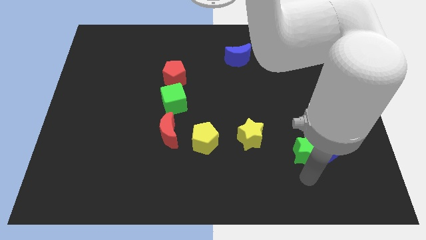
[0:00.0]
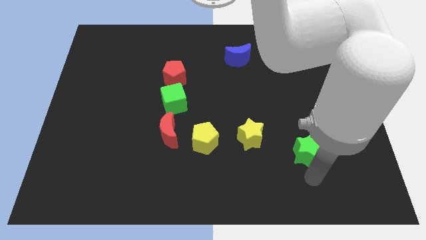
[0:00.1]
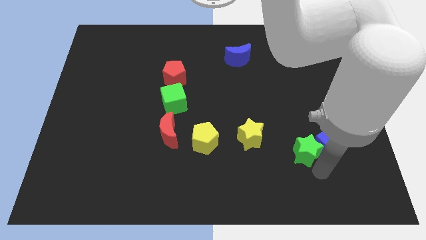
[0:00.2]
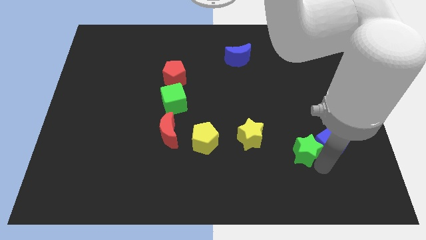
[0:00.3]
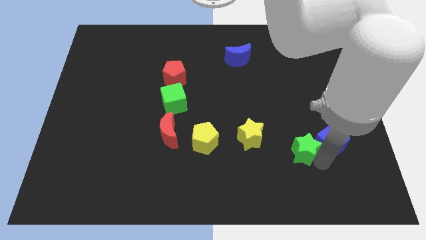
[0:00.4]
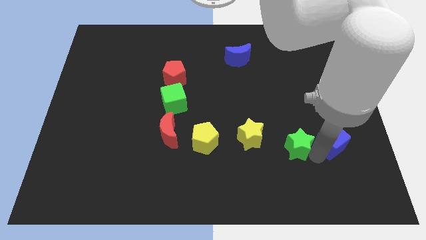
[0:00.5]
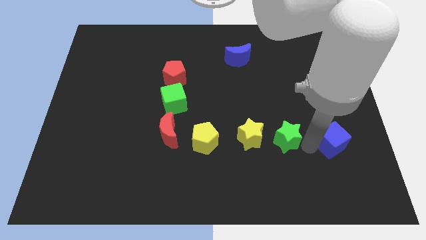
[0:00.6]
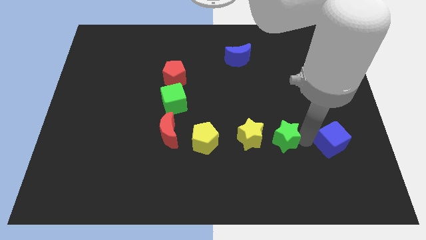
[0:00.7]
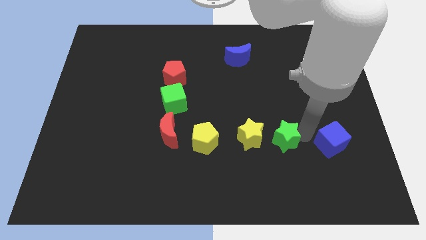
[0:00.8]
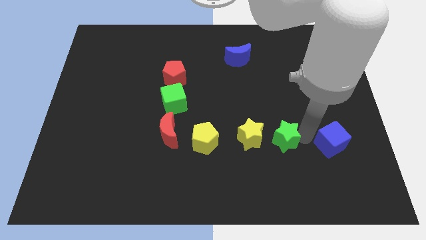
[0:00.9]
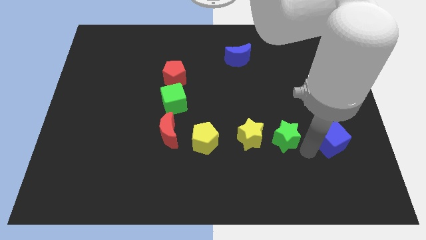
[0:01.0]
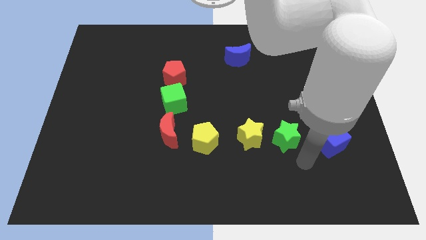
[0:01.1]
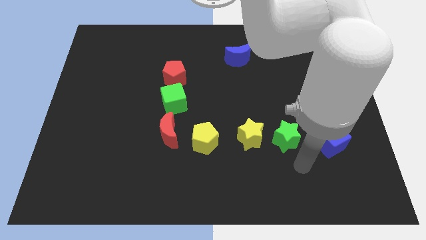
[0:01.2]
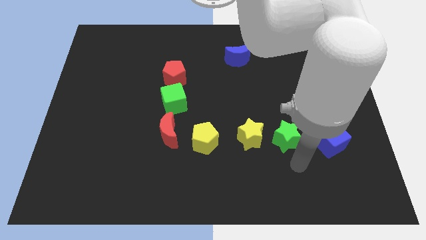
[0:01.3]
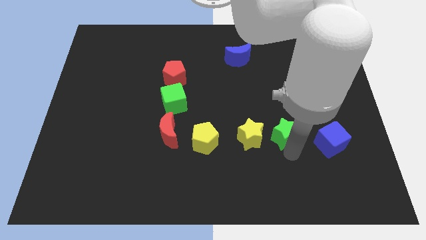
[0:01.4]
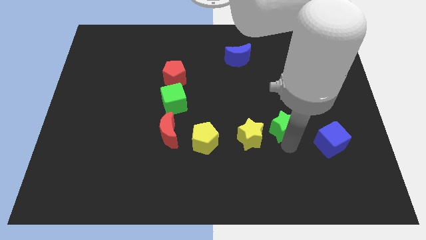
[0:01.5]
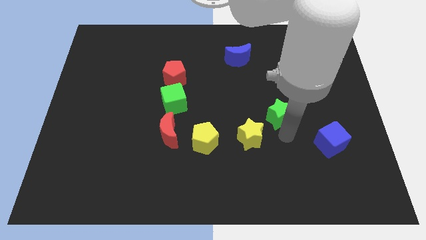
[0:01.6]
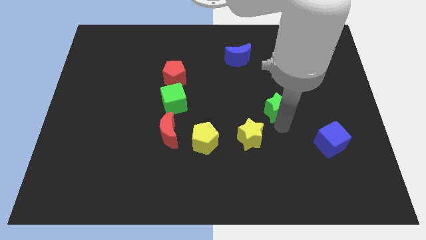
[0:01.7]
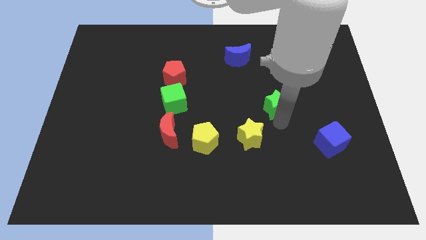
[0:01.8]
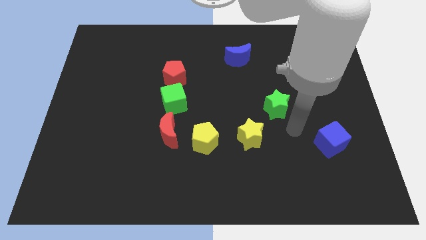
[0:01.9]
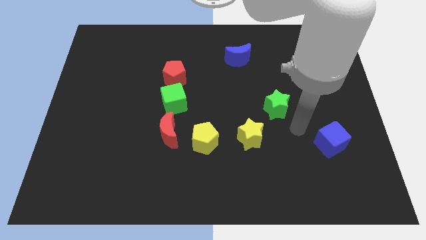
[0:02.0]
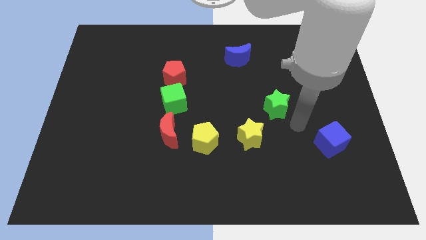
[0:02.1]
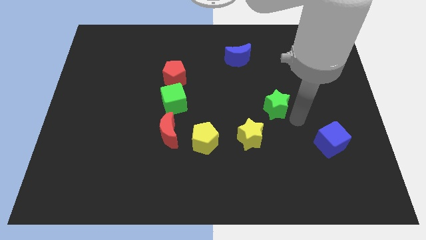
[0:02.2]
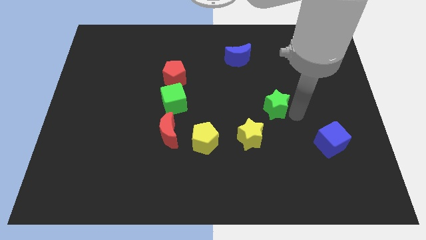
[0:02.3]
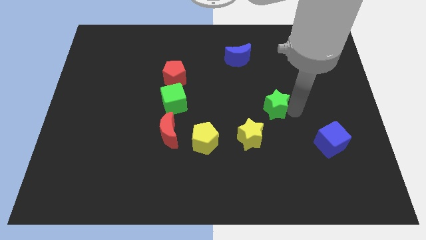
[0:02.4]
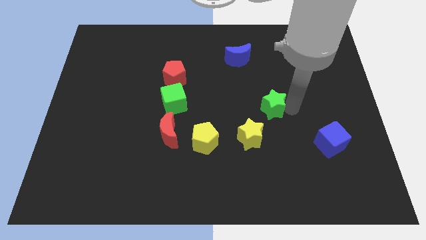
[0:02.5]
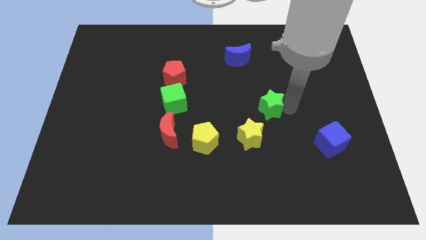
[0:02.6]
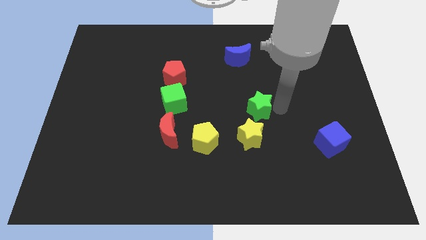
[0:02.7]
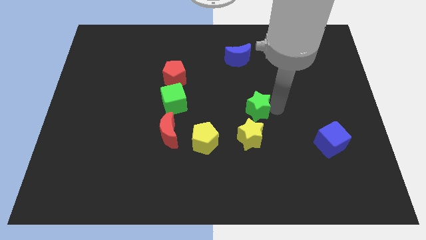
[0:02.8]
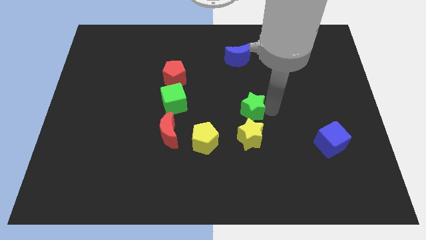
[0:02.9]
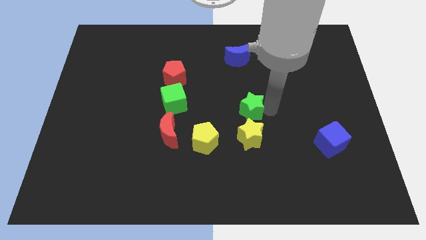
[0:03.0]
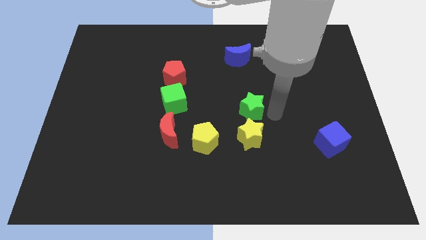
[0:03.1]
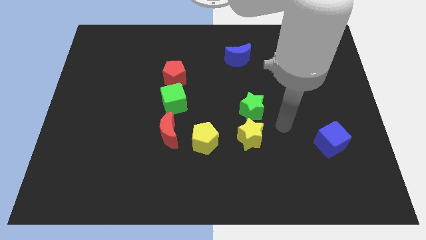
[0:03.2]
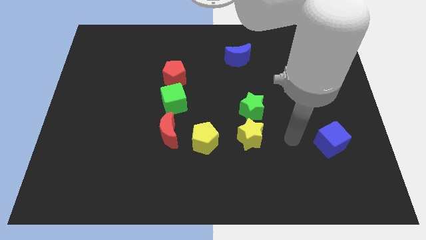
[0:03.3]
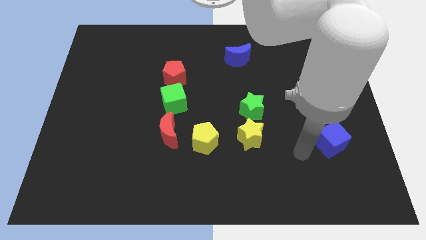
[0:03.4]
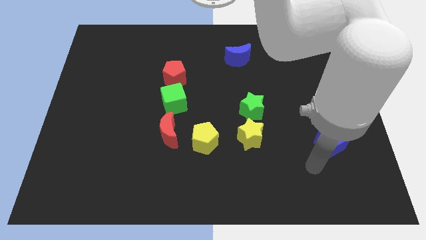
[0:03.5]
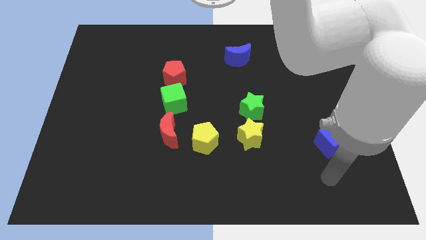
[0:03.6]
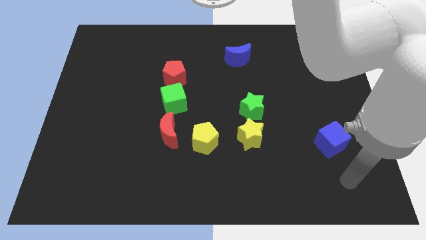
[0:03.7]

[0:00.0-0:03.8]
move the green star above the yellow star

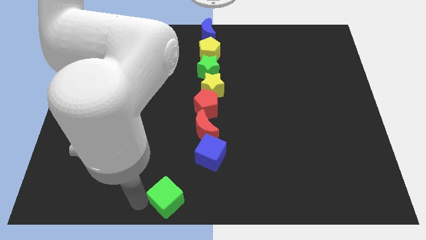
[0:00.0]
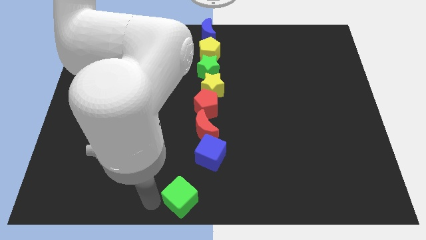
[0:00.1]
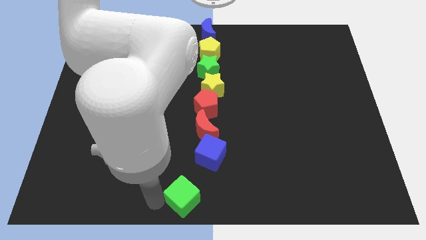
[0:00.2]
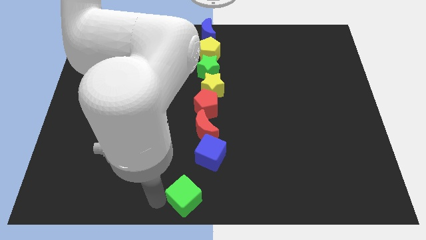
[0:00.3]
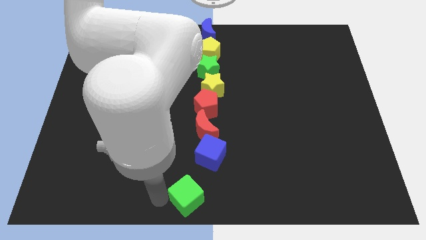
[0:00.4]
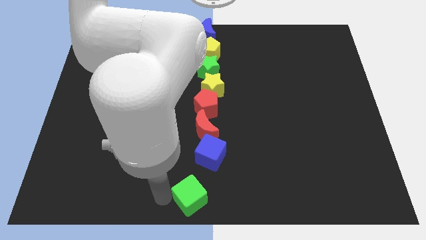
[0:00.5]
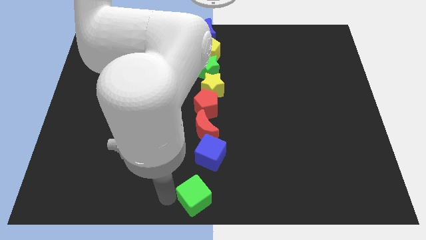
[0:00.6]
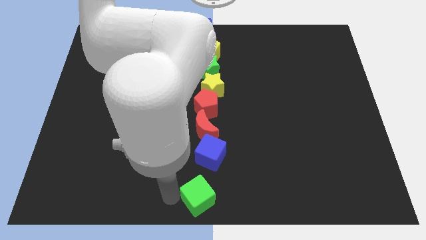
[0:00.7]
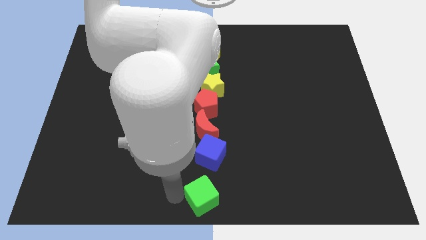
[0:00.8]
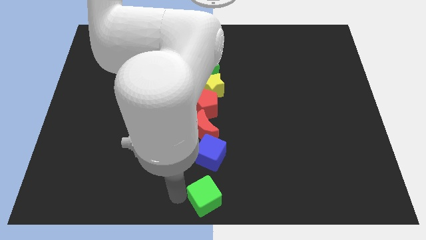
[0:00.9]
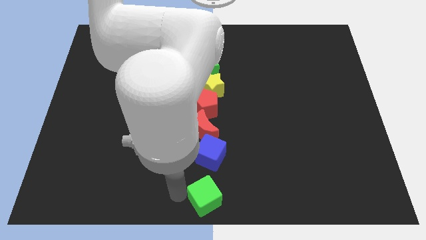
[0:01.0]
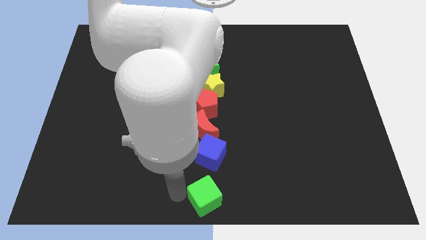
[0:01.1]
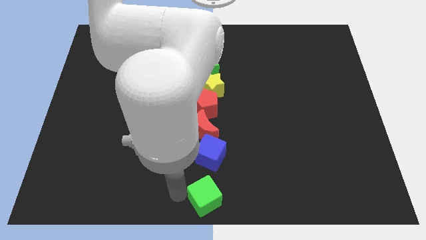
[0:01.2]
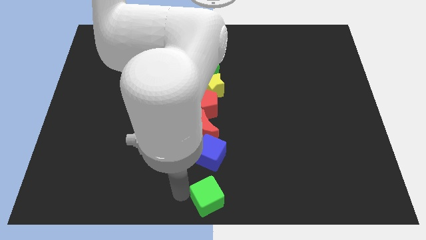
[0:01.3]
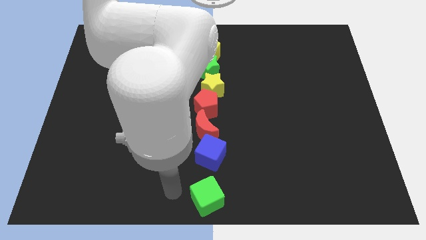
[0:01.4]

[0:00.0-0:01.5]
move green cube to the bottom of blue cube

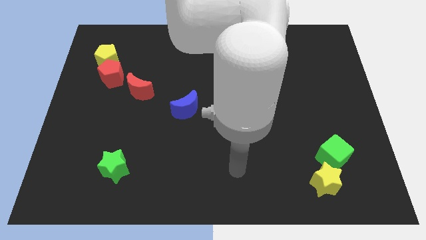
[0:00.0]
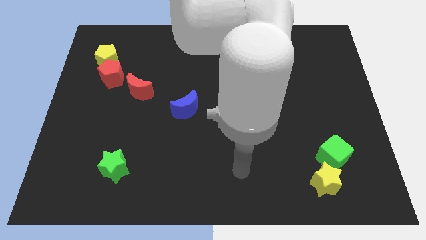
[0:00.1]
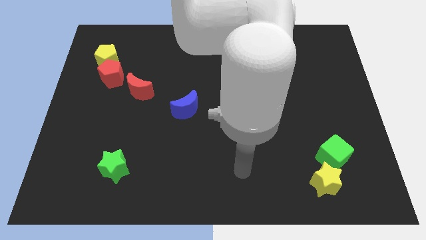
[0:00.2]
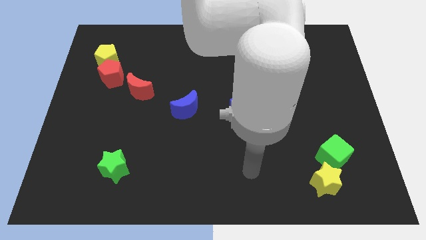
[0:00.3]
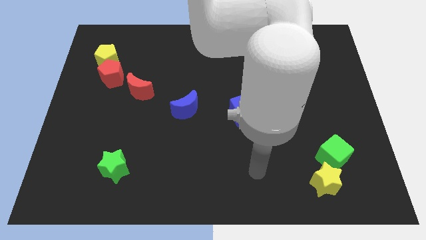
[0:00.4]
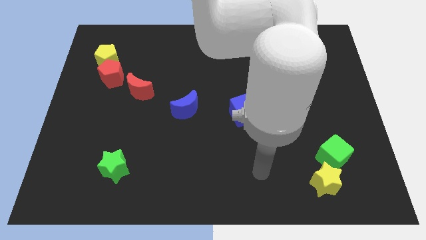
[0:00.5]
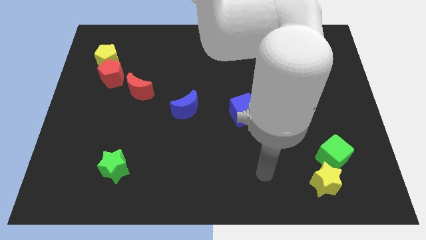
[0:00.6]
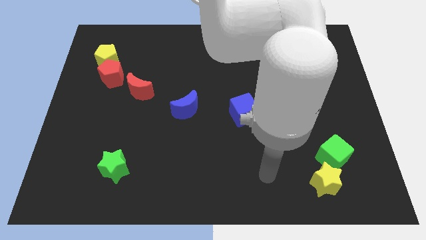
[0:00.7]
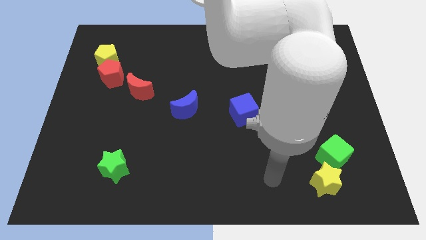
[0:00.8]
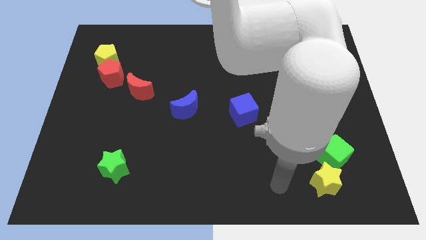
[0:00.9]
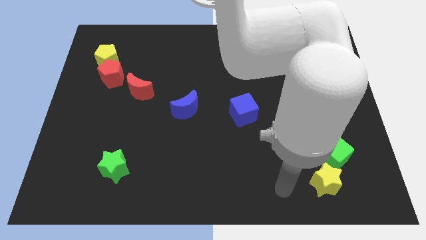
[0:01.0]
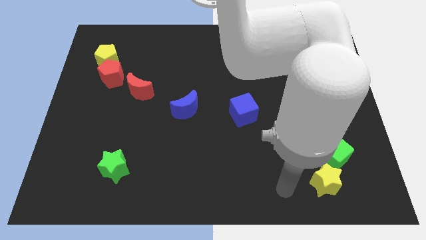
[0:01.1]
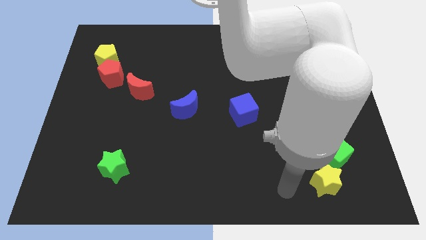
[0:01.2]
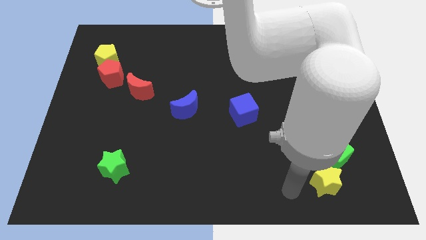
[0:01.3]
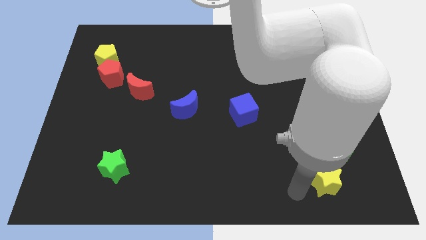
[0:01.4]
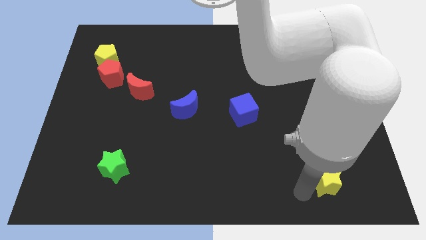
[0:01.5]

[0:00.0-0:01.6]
move your hand close to the left side of the yellow star

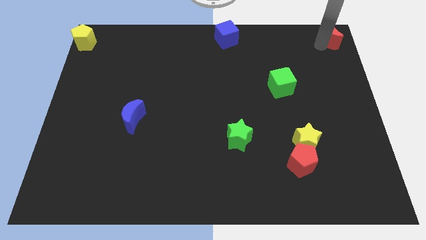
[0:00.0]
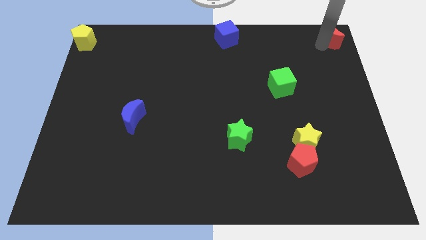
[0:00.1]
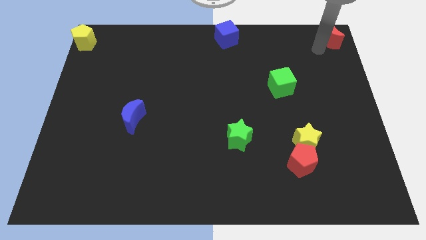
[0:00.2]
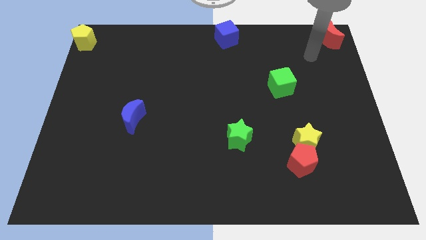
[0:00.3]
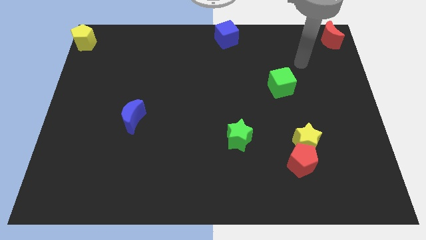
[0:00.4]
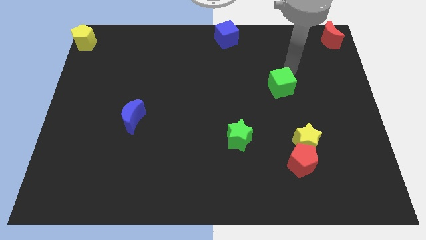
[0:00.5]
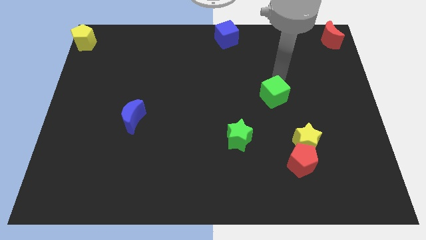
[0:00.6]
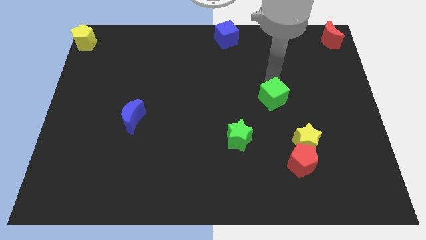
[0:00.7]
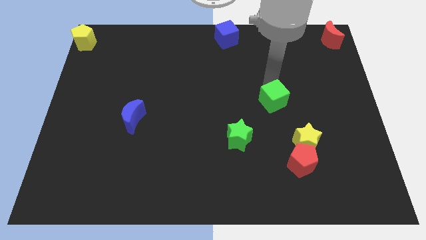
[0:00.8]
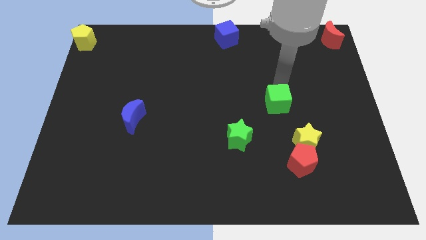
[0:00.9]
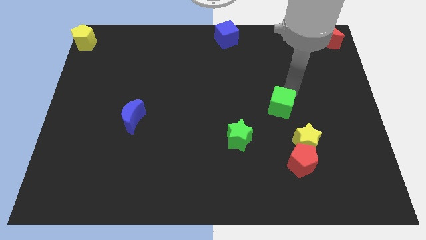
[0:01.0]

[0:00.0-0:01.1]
point your arm above green cube

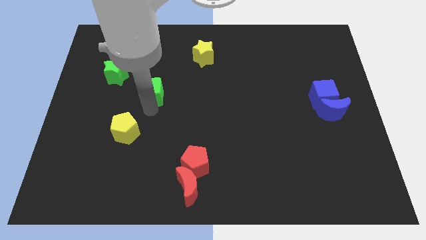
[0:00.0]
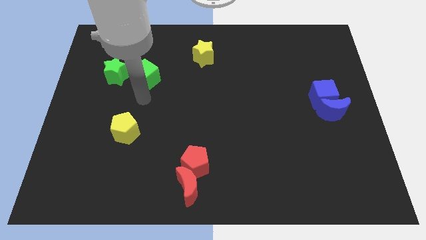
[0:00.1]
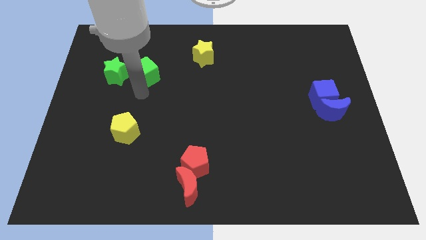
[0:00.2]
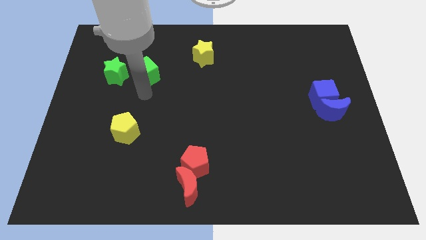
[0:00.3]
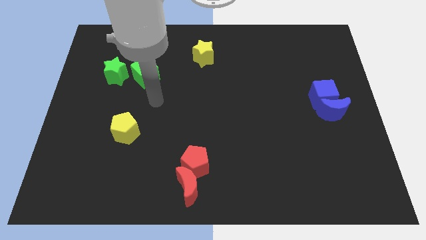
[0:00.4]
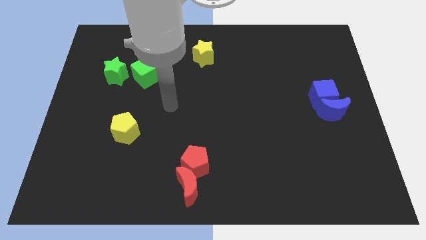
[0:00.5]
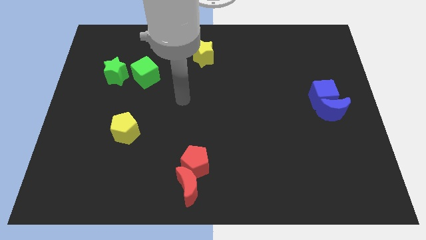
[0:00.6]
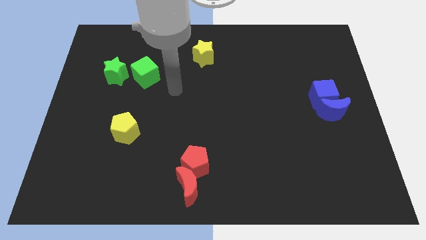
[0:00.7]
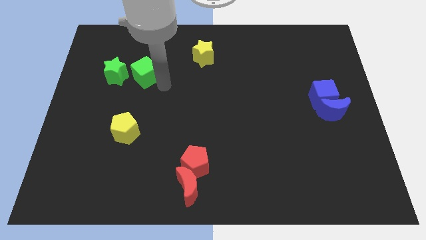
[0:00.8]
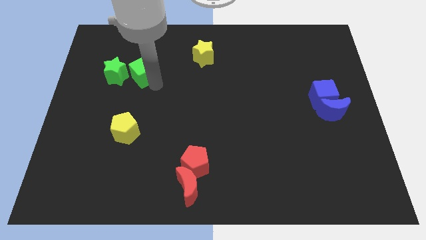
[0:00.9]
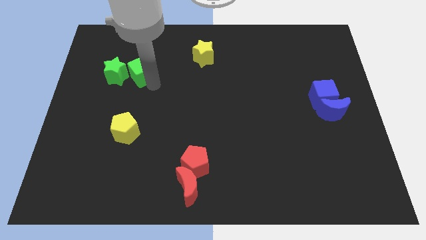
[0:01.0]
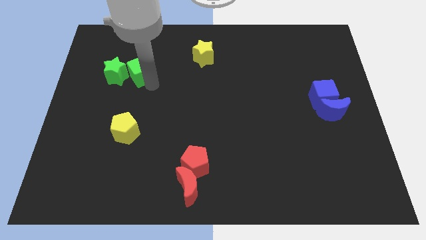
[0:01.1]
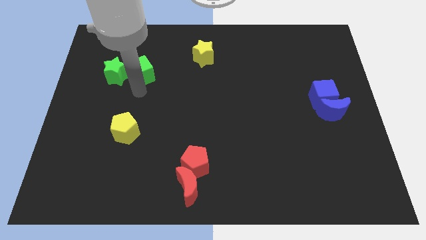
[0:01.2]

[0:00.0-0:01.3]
move the green cube close to the green star
